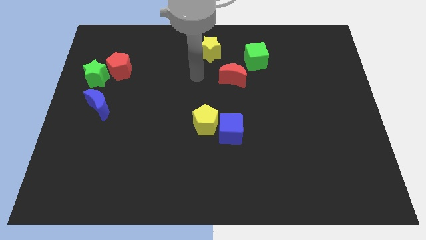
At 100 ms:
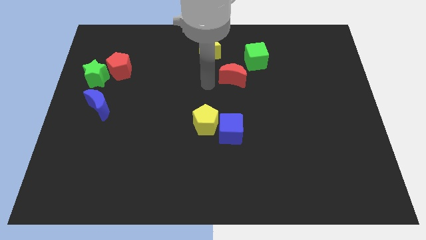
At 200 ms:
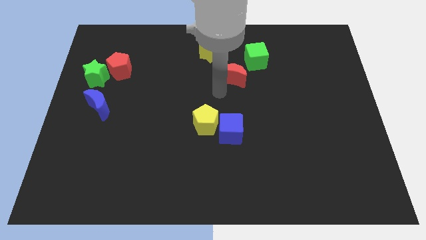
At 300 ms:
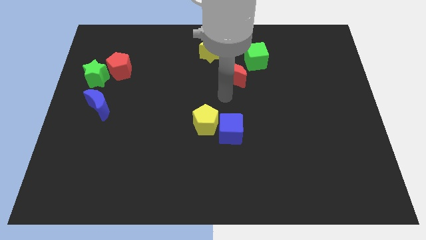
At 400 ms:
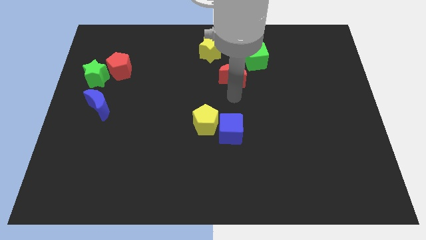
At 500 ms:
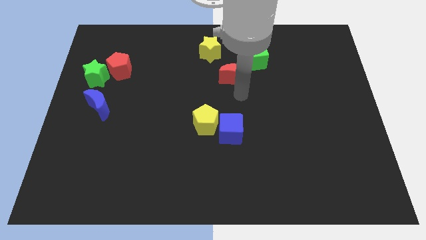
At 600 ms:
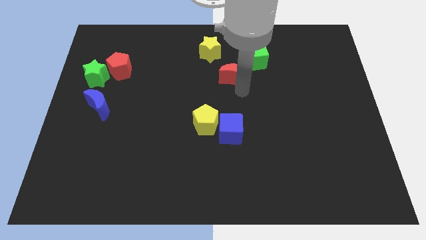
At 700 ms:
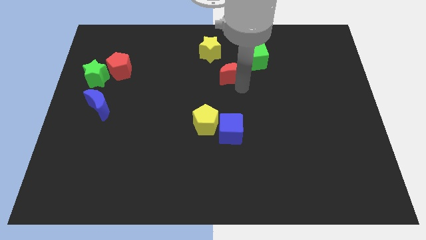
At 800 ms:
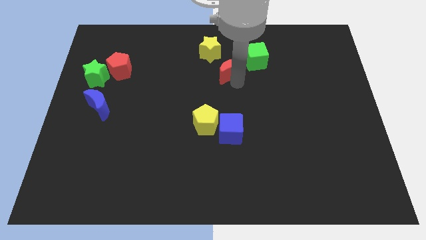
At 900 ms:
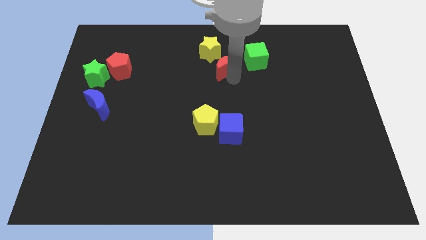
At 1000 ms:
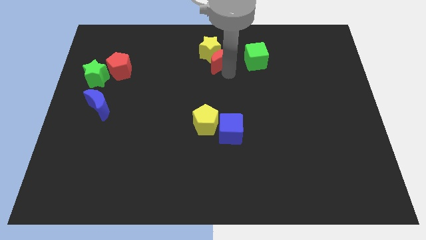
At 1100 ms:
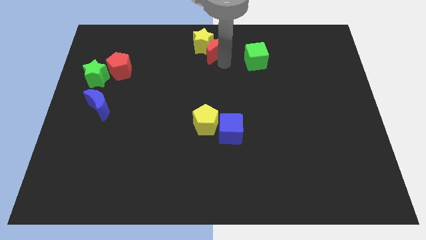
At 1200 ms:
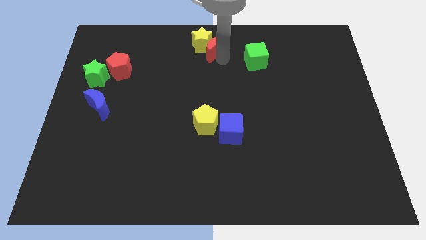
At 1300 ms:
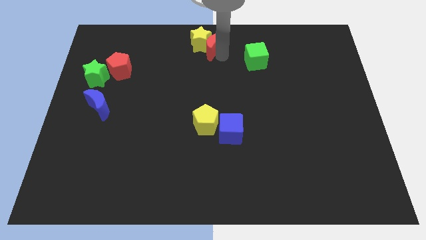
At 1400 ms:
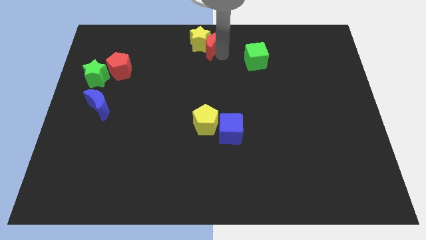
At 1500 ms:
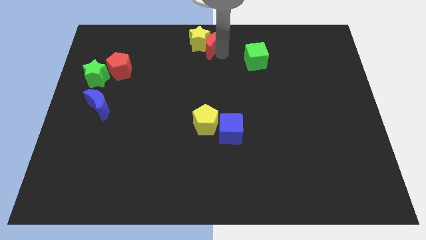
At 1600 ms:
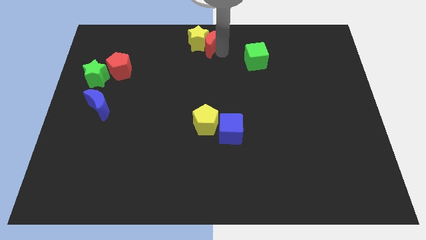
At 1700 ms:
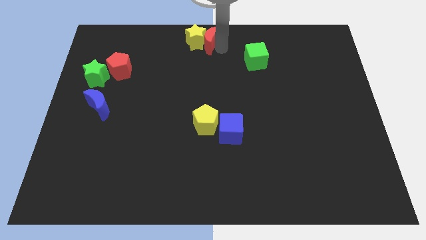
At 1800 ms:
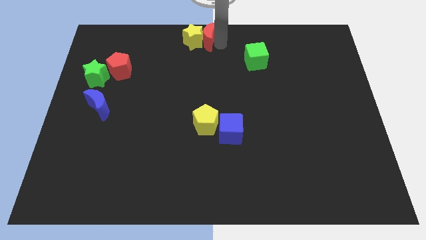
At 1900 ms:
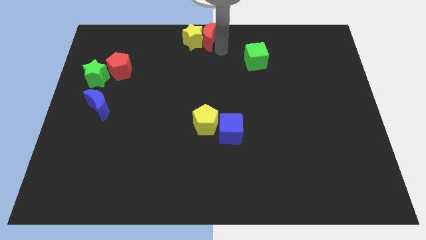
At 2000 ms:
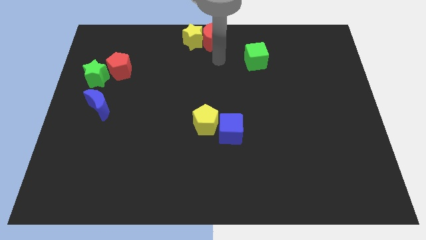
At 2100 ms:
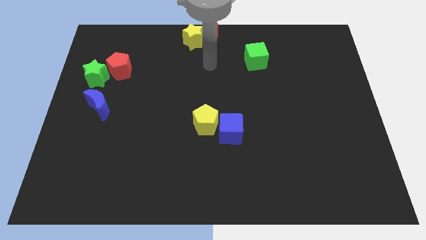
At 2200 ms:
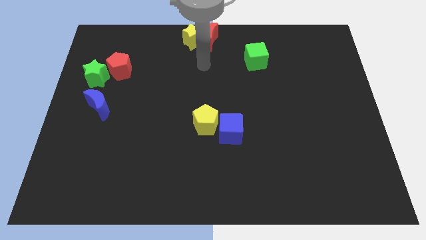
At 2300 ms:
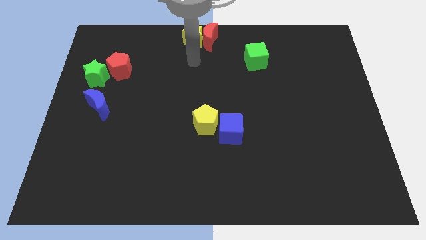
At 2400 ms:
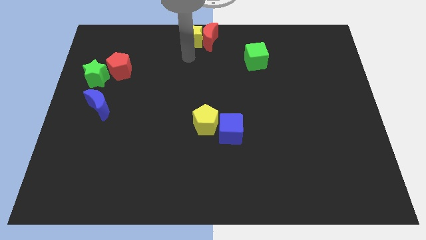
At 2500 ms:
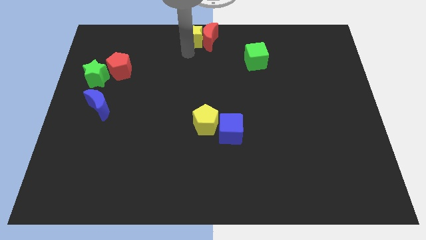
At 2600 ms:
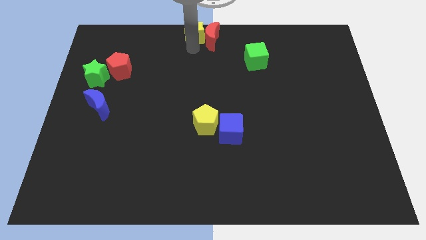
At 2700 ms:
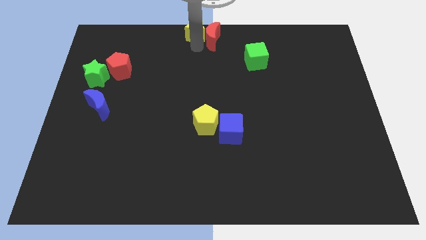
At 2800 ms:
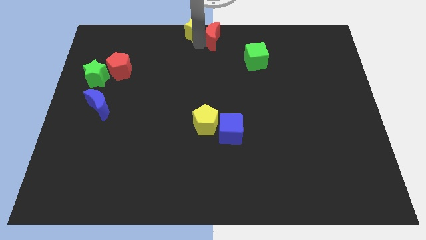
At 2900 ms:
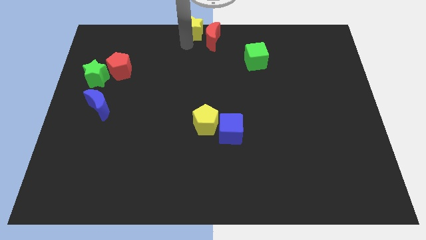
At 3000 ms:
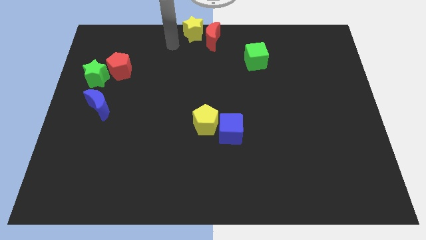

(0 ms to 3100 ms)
place the yellow star vertical to the yellow pentagon

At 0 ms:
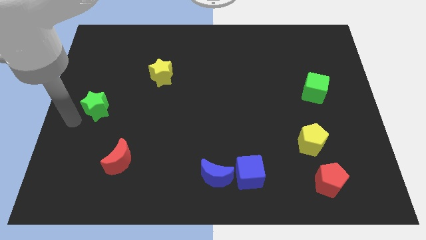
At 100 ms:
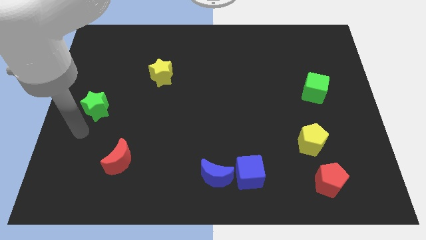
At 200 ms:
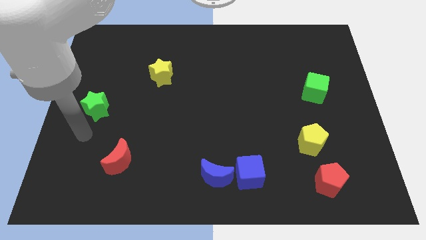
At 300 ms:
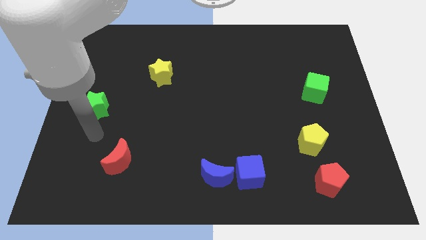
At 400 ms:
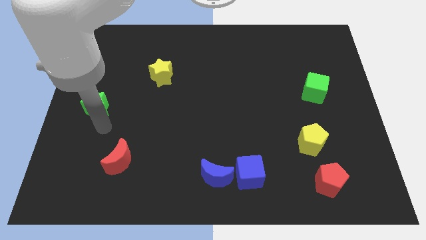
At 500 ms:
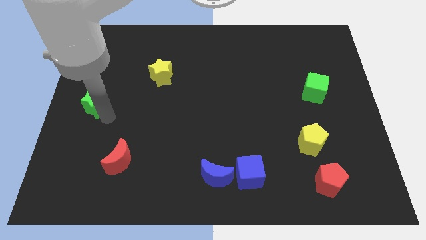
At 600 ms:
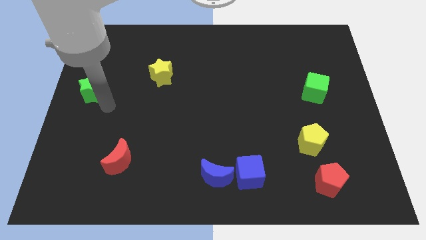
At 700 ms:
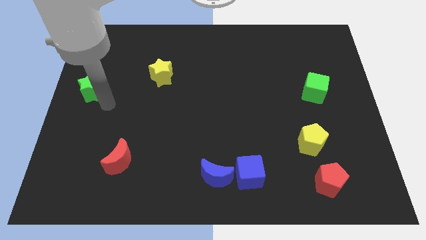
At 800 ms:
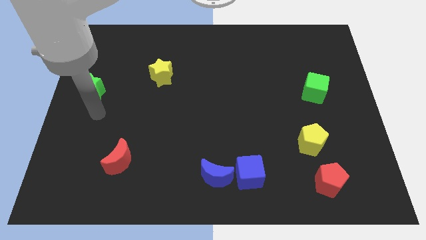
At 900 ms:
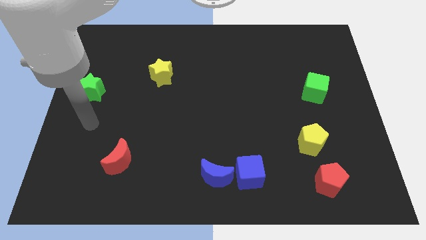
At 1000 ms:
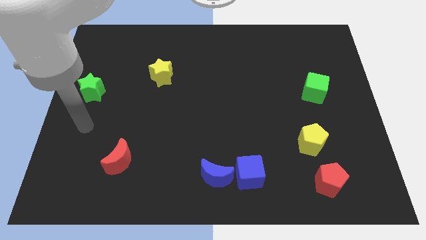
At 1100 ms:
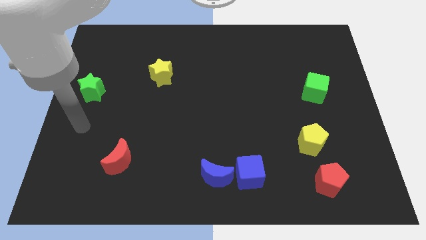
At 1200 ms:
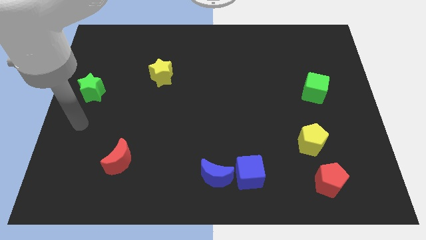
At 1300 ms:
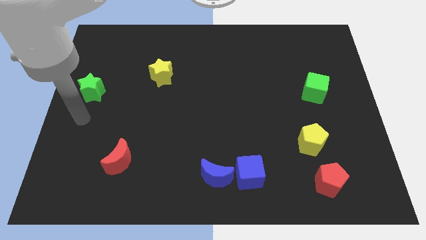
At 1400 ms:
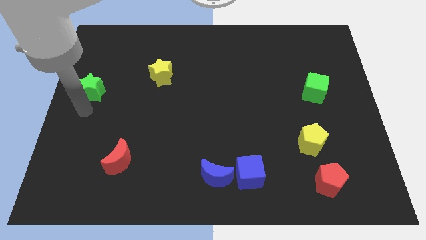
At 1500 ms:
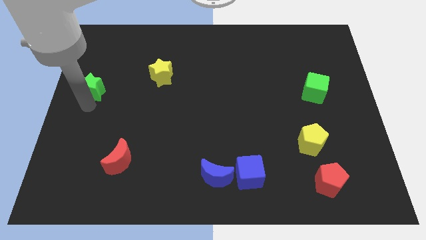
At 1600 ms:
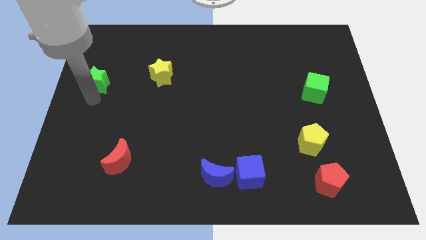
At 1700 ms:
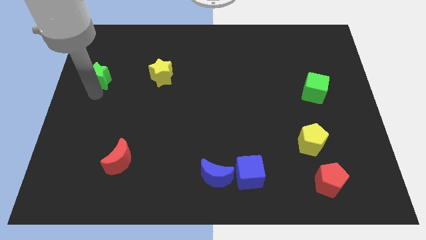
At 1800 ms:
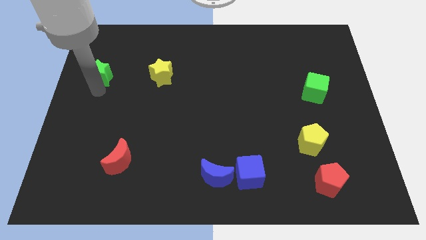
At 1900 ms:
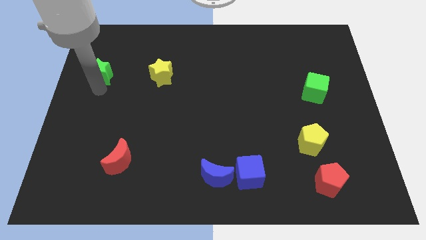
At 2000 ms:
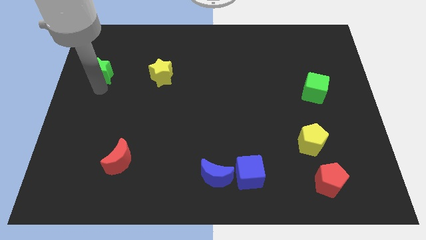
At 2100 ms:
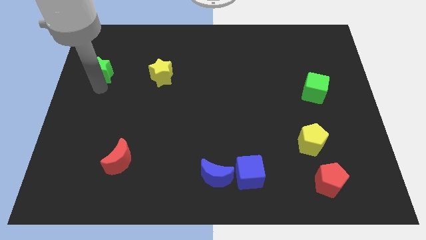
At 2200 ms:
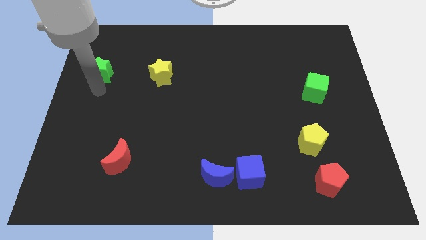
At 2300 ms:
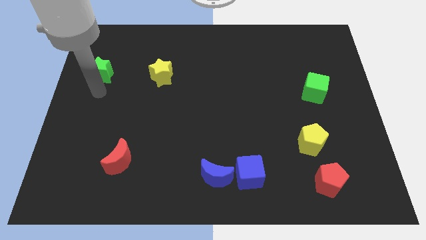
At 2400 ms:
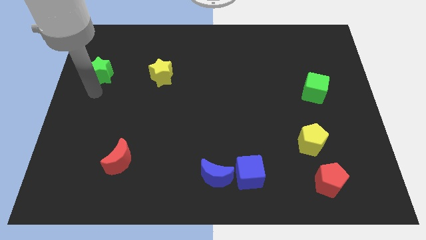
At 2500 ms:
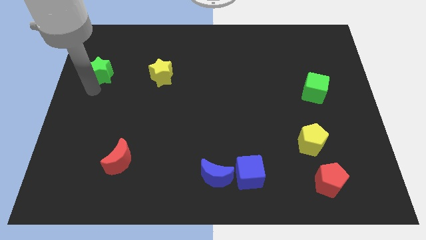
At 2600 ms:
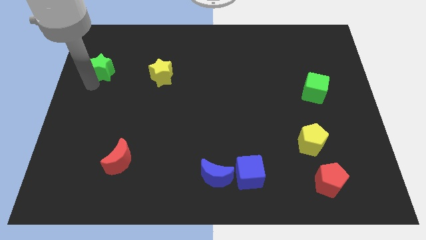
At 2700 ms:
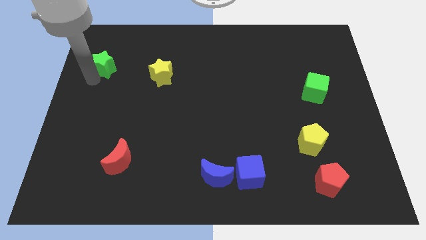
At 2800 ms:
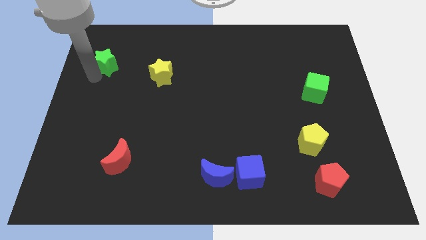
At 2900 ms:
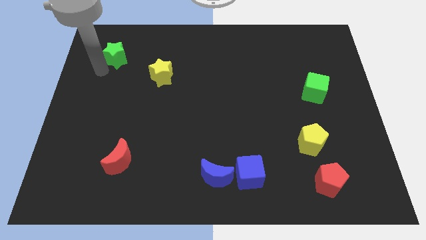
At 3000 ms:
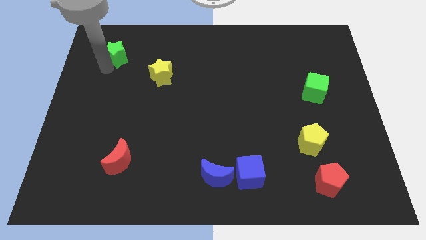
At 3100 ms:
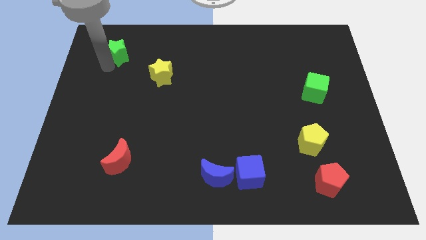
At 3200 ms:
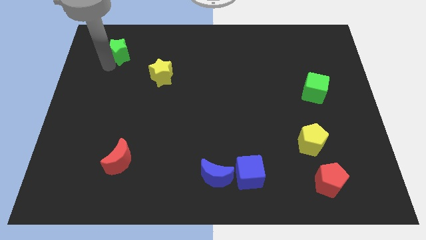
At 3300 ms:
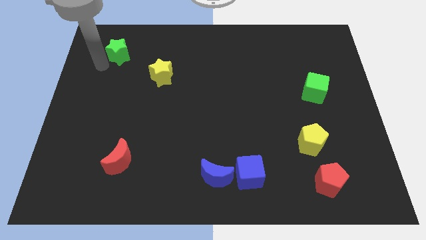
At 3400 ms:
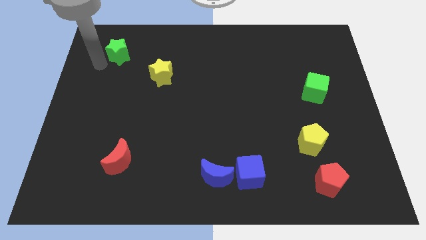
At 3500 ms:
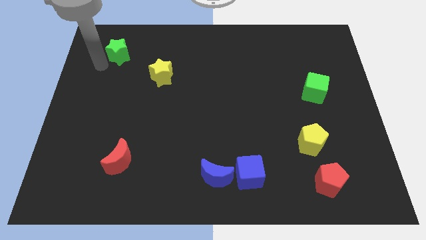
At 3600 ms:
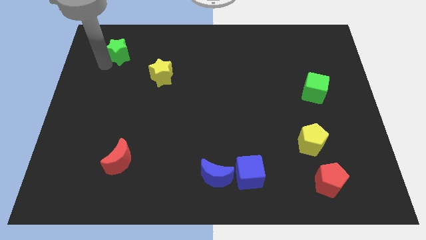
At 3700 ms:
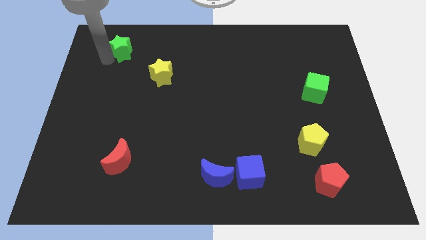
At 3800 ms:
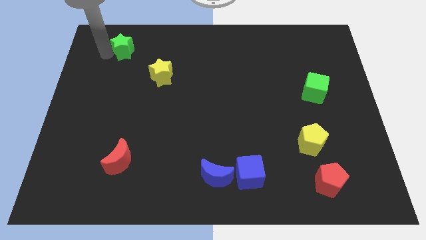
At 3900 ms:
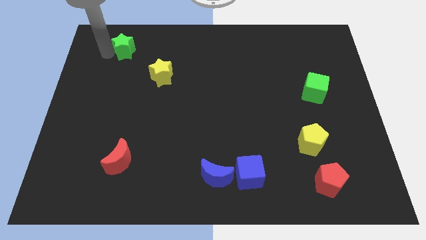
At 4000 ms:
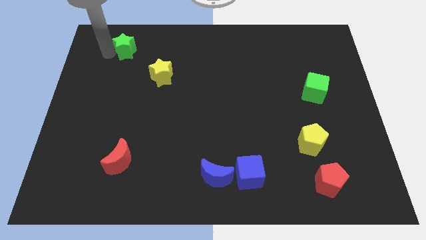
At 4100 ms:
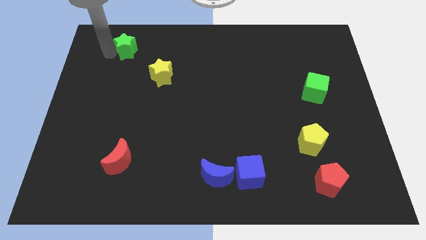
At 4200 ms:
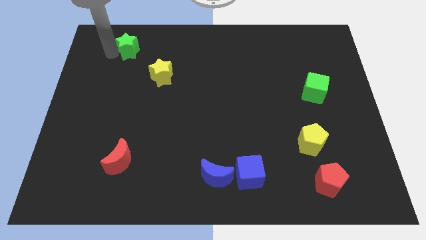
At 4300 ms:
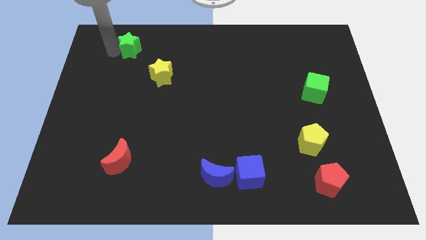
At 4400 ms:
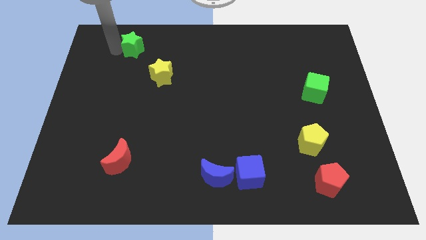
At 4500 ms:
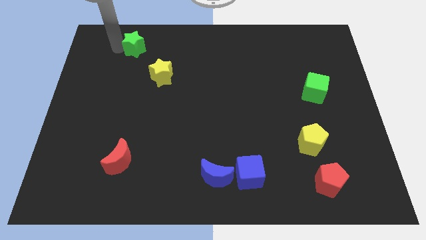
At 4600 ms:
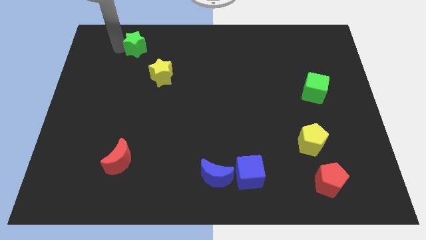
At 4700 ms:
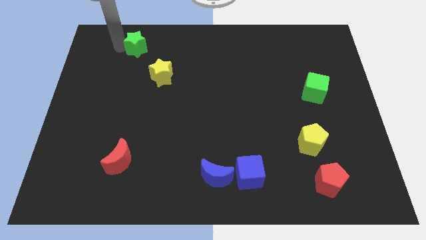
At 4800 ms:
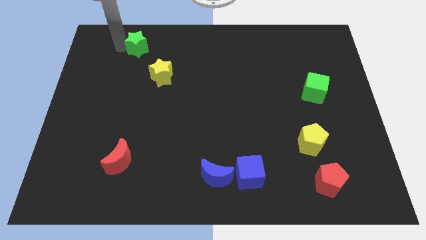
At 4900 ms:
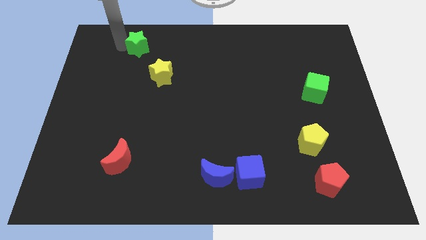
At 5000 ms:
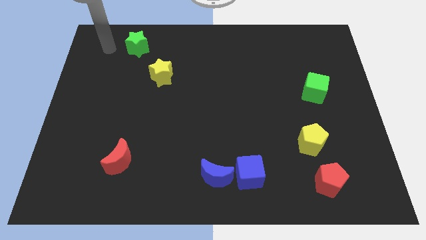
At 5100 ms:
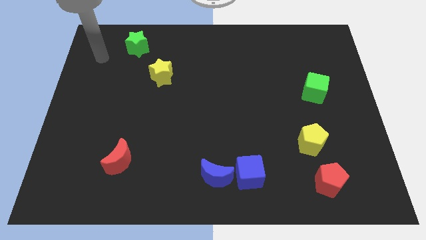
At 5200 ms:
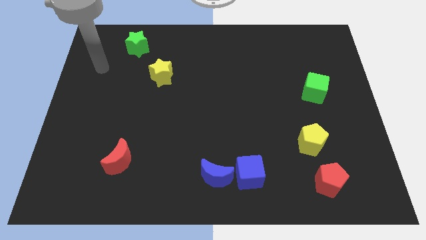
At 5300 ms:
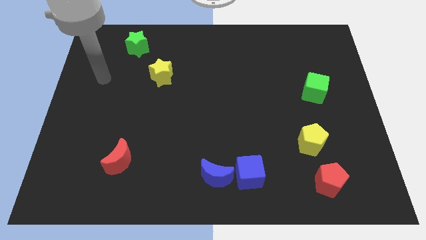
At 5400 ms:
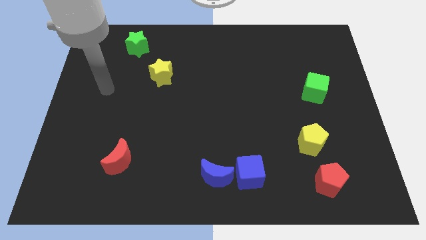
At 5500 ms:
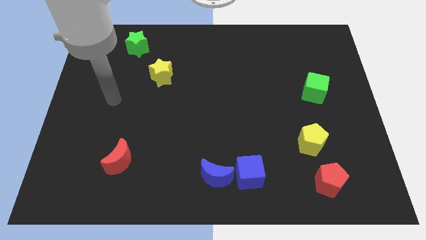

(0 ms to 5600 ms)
move the green star to the top of the board

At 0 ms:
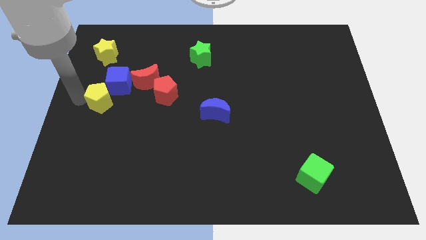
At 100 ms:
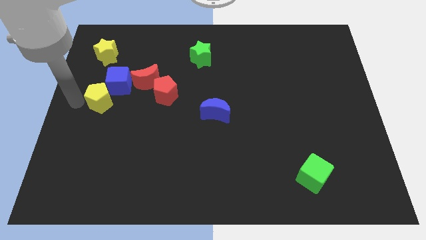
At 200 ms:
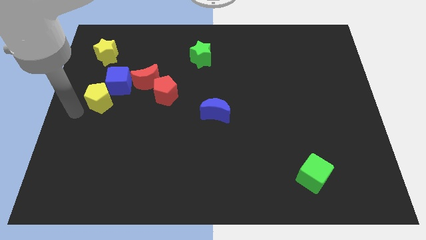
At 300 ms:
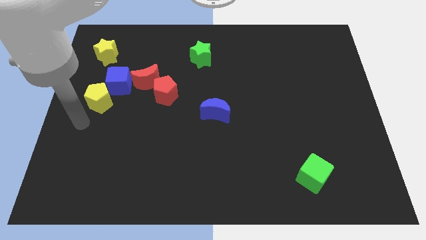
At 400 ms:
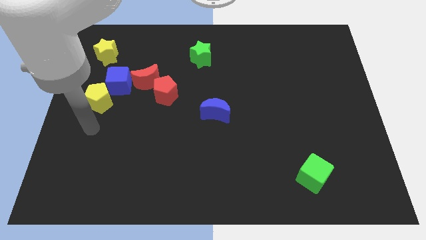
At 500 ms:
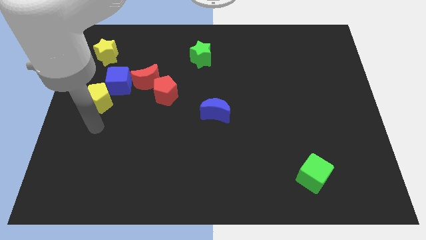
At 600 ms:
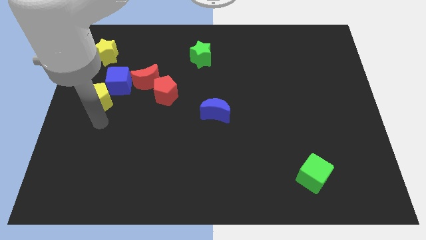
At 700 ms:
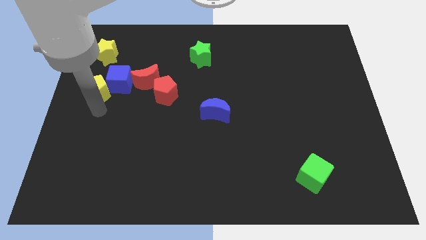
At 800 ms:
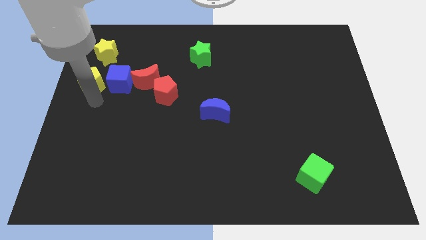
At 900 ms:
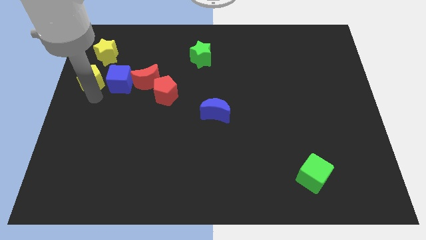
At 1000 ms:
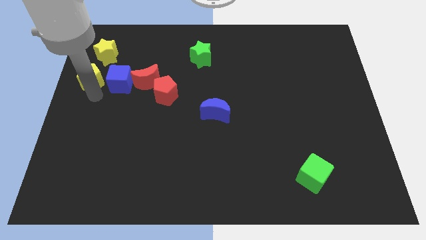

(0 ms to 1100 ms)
place the yellow pentagon left to the blue cube
